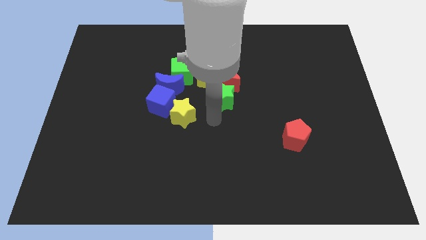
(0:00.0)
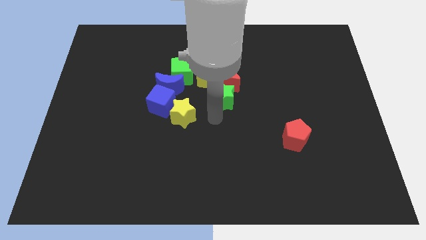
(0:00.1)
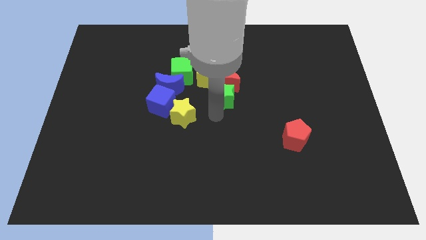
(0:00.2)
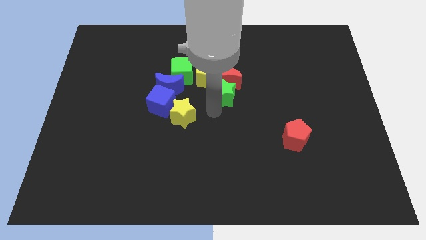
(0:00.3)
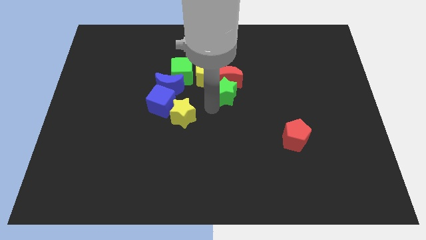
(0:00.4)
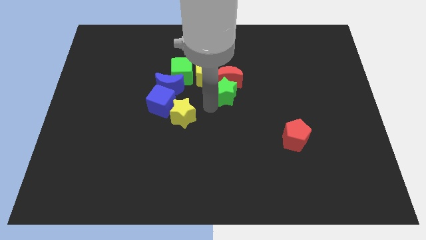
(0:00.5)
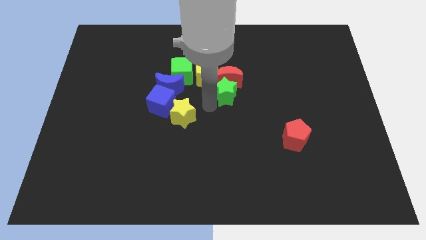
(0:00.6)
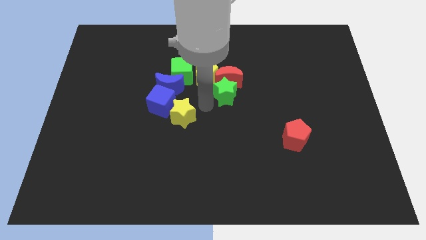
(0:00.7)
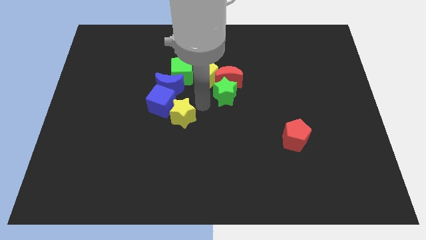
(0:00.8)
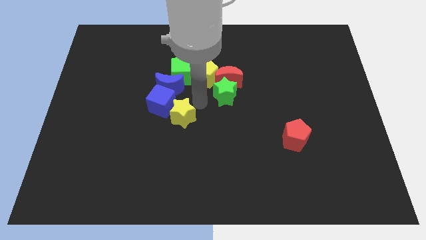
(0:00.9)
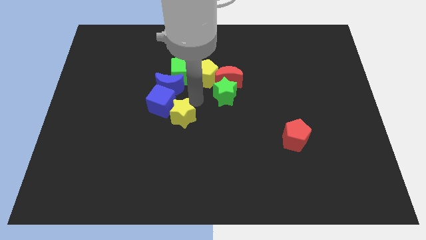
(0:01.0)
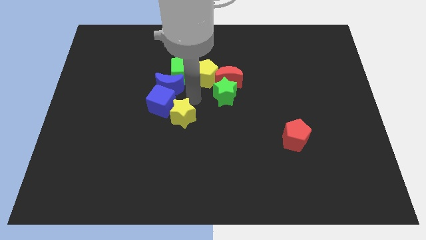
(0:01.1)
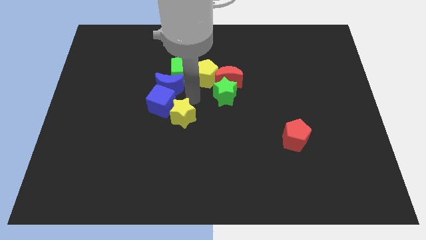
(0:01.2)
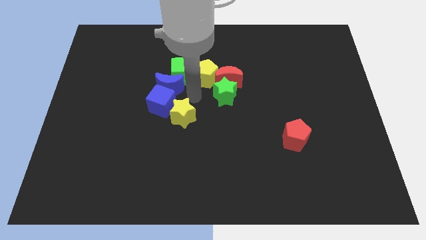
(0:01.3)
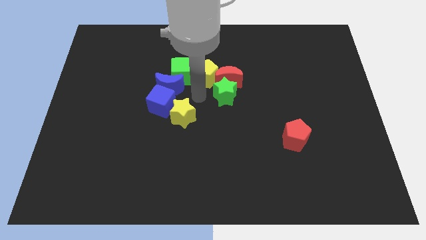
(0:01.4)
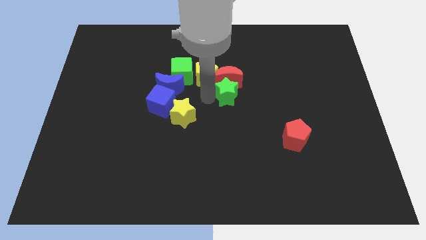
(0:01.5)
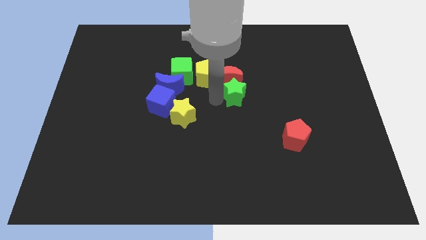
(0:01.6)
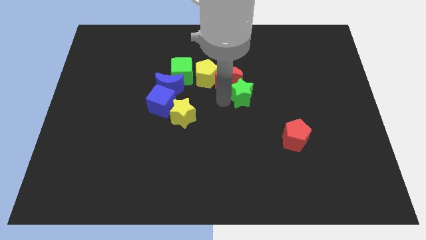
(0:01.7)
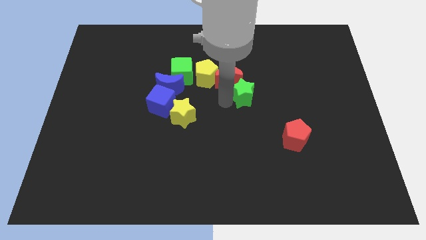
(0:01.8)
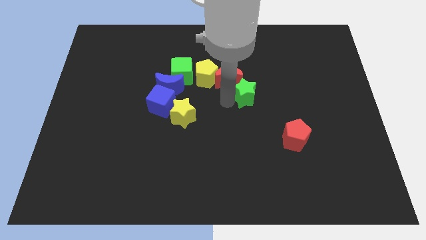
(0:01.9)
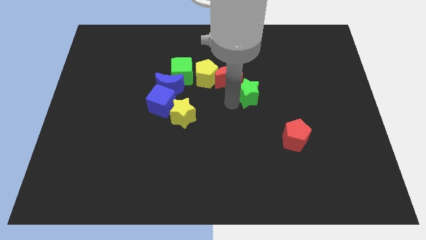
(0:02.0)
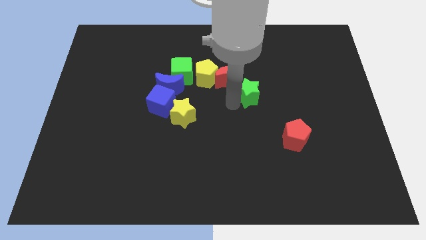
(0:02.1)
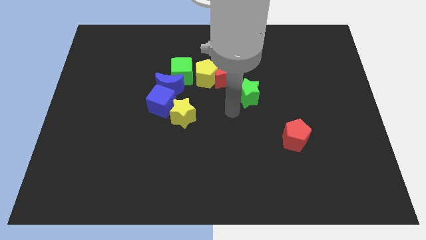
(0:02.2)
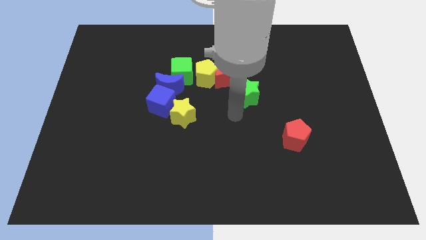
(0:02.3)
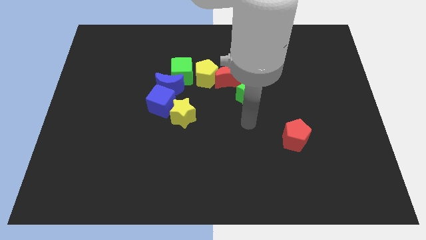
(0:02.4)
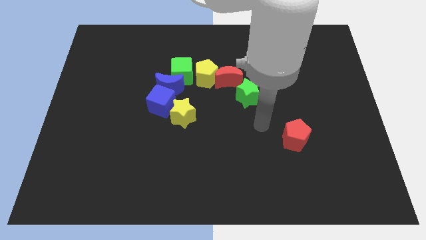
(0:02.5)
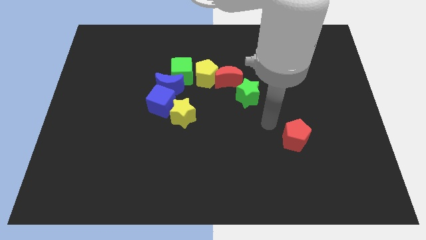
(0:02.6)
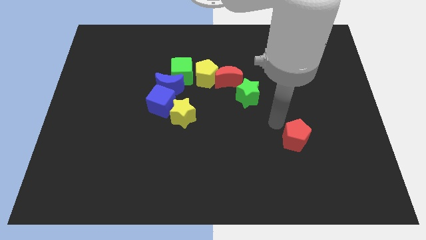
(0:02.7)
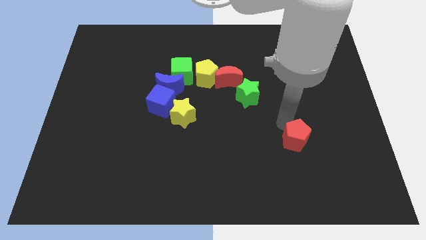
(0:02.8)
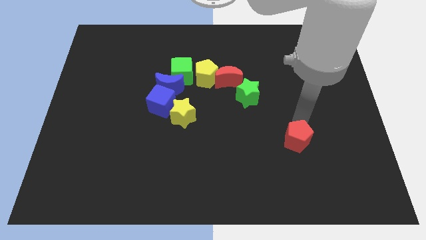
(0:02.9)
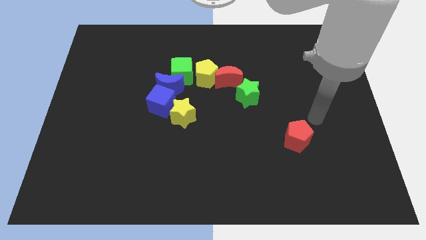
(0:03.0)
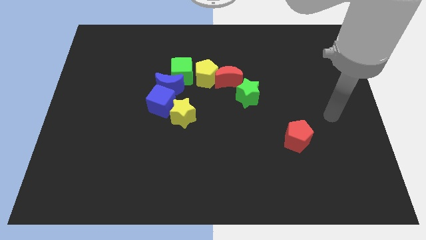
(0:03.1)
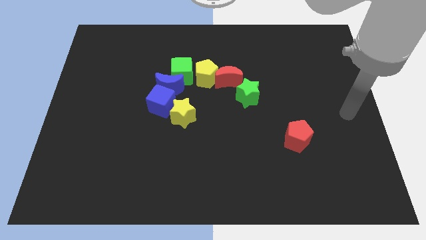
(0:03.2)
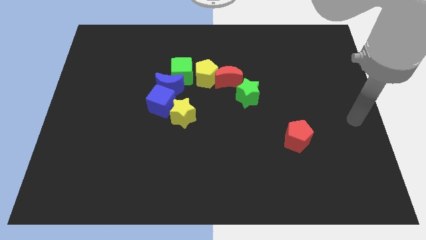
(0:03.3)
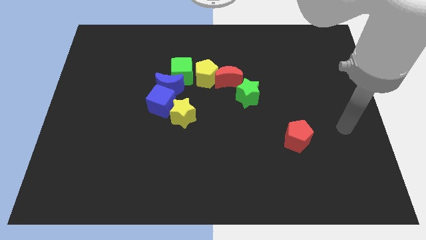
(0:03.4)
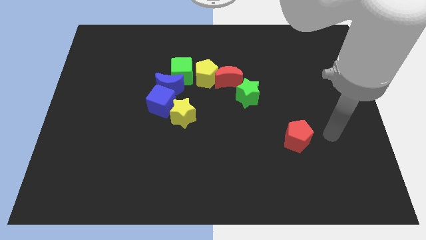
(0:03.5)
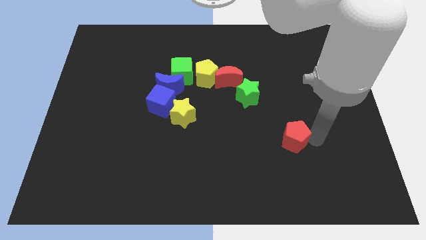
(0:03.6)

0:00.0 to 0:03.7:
slightly move the green star to the right

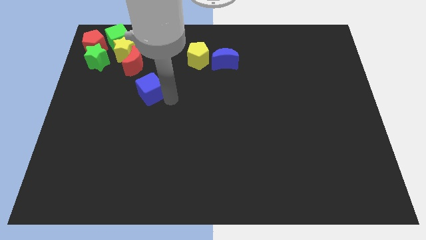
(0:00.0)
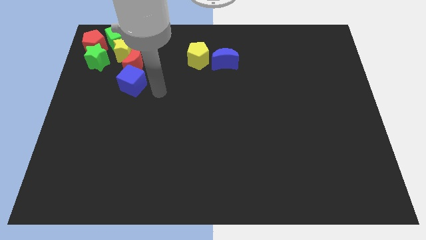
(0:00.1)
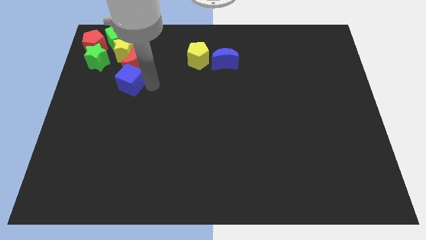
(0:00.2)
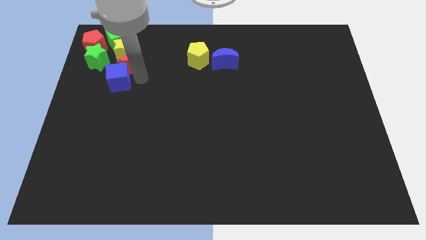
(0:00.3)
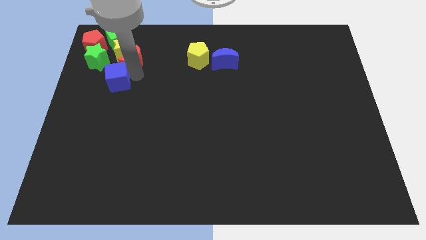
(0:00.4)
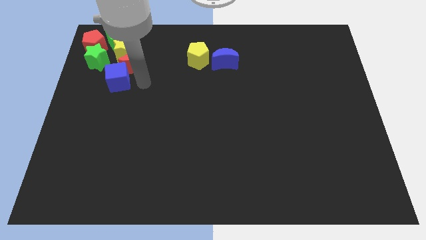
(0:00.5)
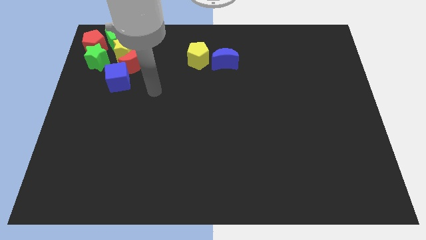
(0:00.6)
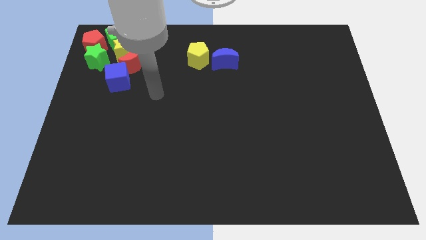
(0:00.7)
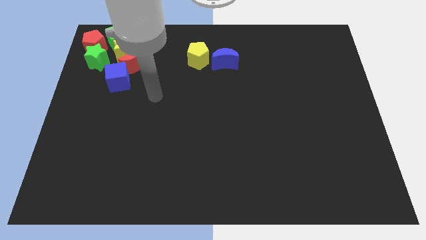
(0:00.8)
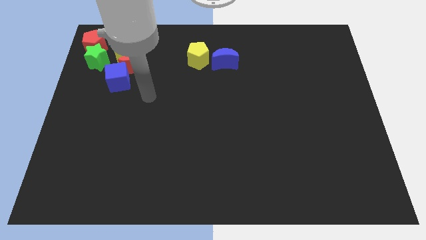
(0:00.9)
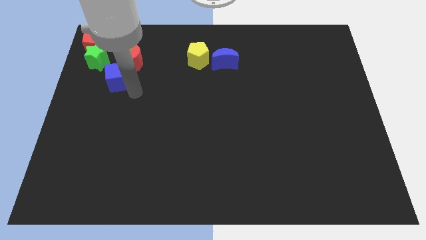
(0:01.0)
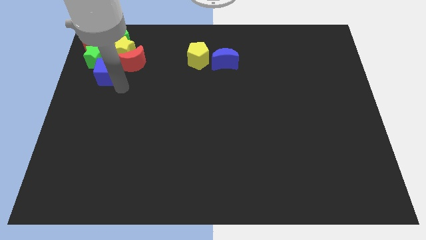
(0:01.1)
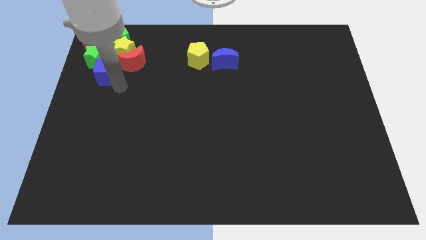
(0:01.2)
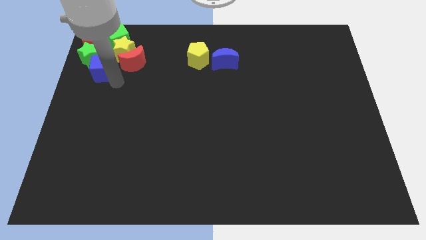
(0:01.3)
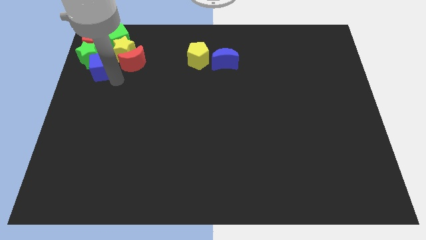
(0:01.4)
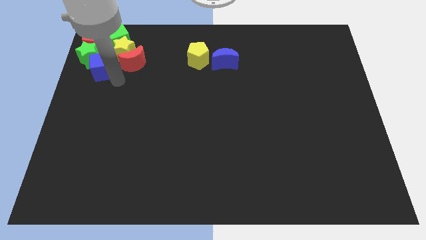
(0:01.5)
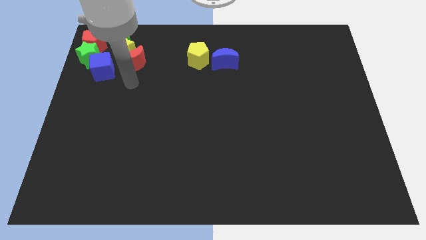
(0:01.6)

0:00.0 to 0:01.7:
move the blue cube to the bottom right of the green star on the board

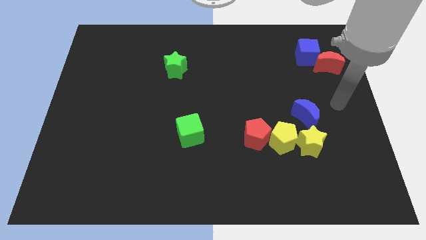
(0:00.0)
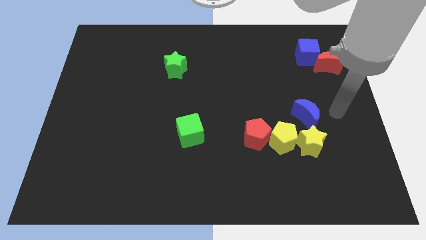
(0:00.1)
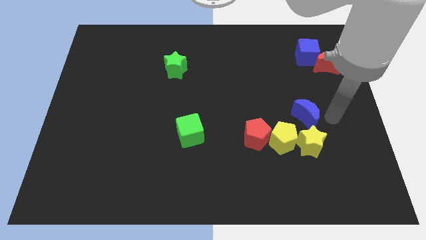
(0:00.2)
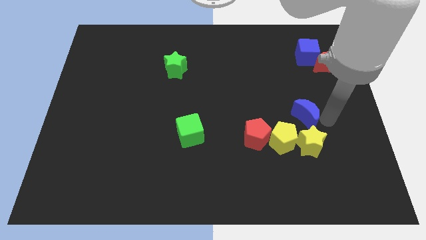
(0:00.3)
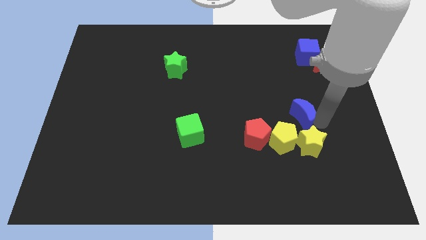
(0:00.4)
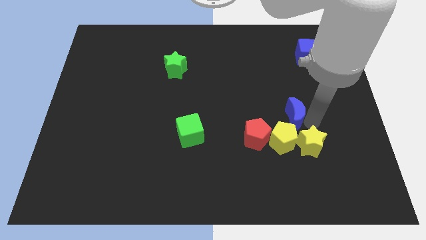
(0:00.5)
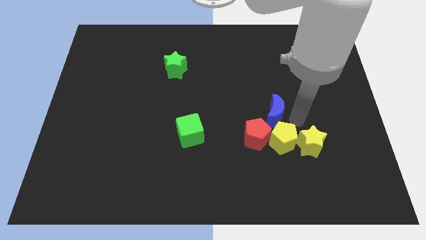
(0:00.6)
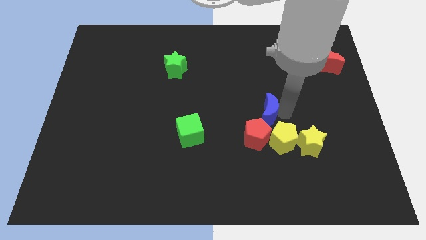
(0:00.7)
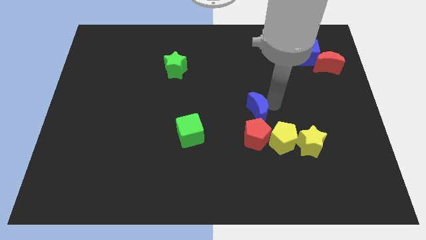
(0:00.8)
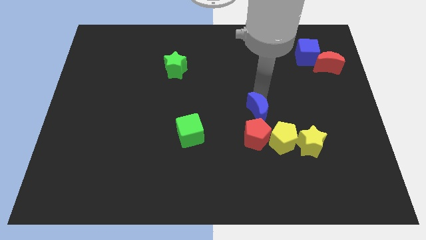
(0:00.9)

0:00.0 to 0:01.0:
push the blue crescent above the red pentagon

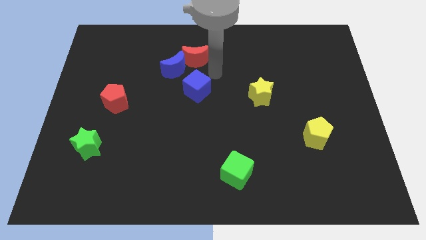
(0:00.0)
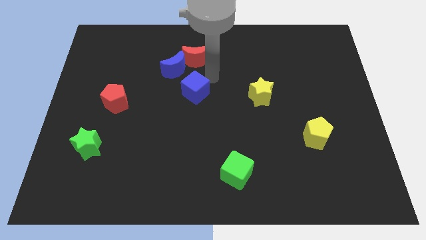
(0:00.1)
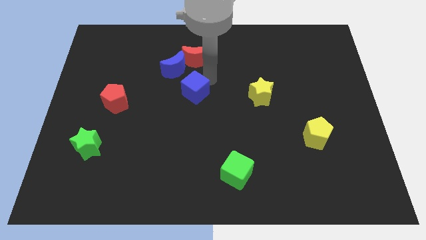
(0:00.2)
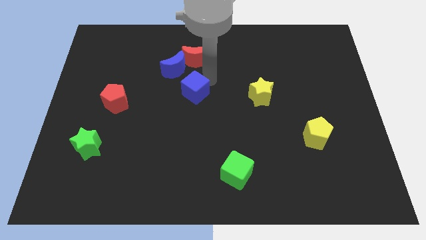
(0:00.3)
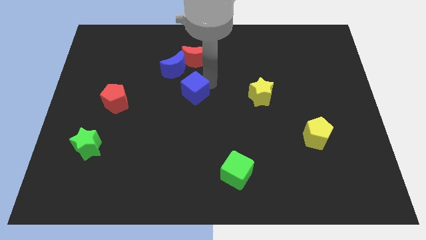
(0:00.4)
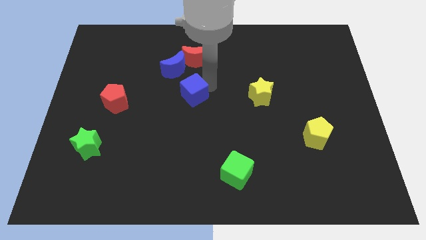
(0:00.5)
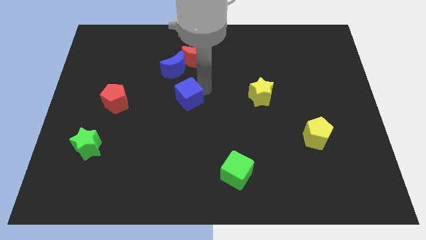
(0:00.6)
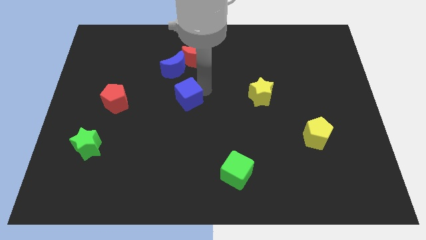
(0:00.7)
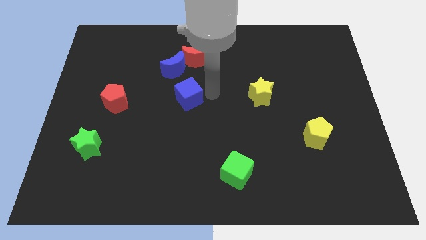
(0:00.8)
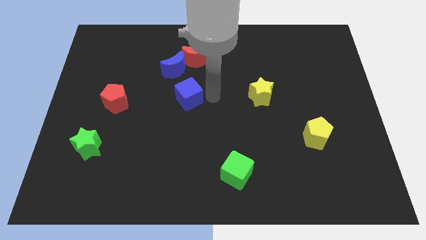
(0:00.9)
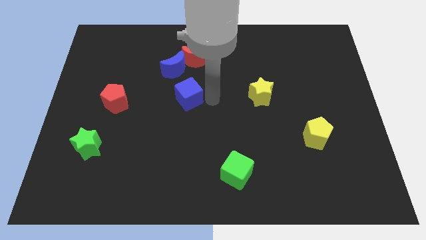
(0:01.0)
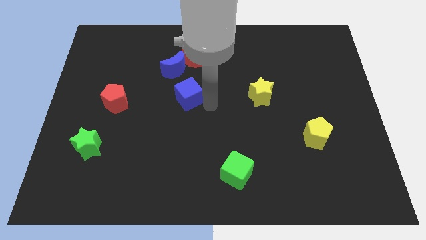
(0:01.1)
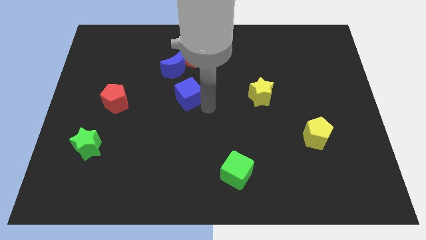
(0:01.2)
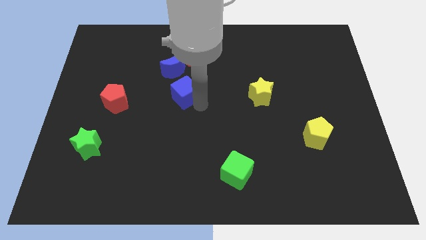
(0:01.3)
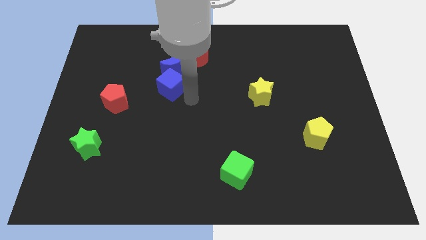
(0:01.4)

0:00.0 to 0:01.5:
move the blue cube to the bottom of the blue crescent

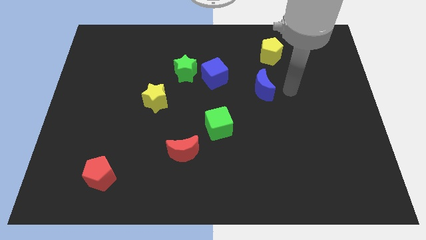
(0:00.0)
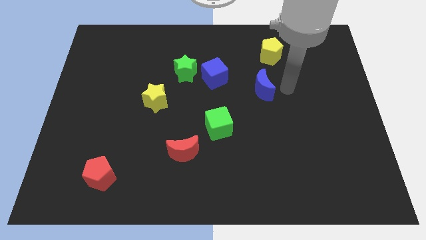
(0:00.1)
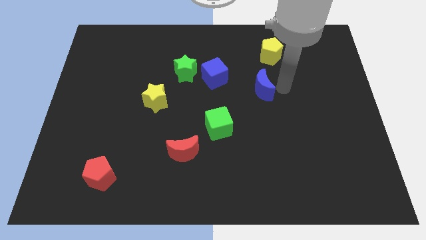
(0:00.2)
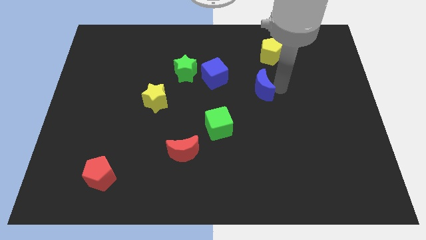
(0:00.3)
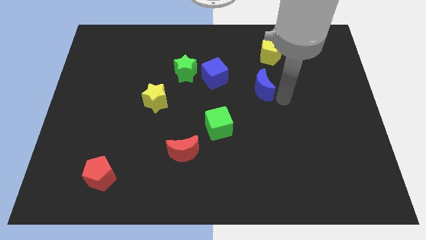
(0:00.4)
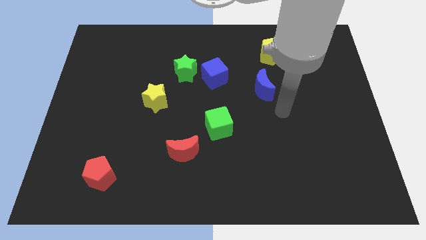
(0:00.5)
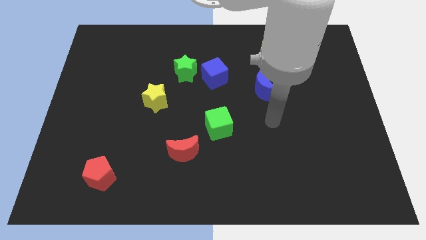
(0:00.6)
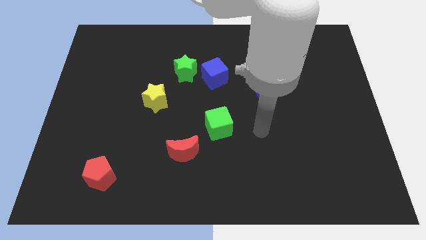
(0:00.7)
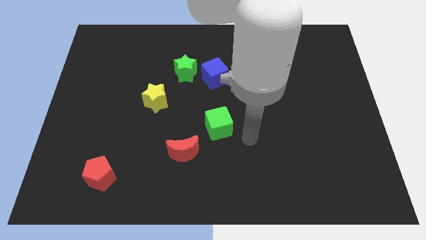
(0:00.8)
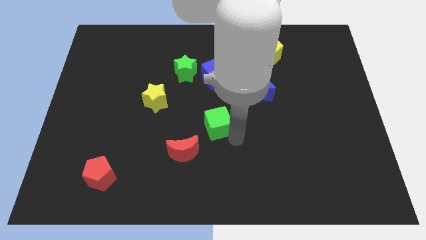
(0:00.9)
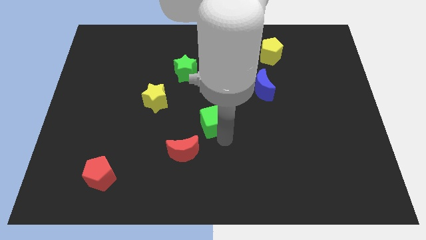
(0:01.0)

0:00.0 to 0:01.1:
touch the bottom of green cube
